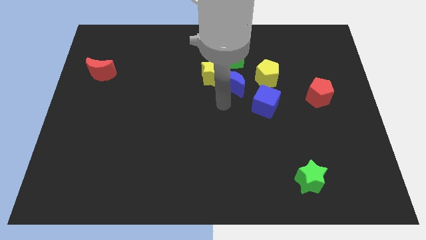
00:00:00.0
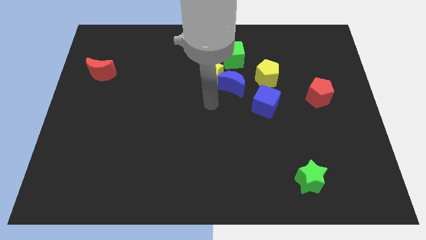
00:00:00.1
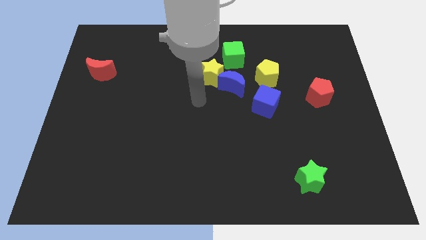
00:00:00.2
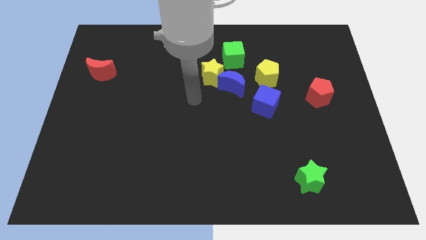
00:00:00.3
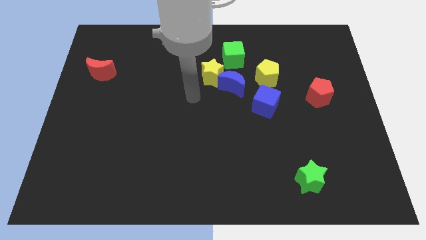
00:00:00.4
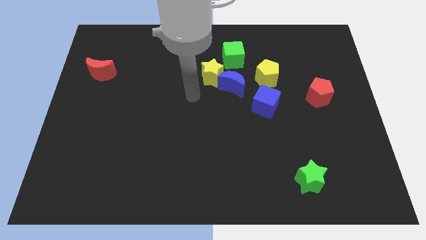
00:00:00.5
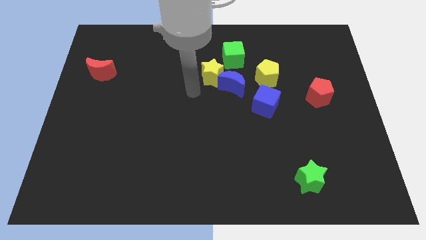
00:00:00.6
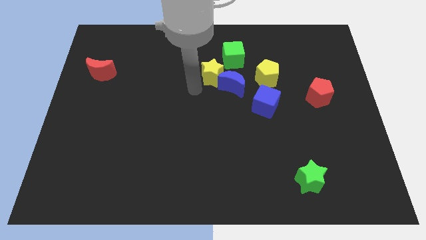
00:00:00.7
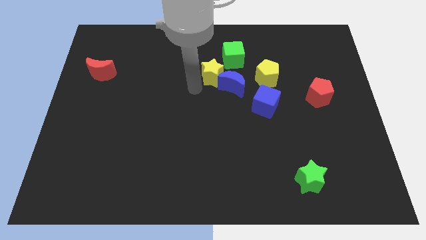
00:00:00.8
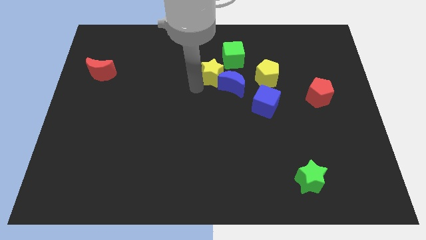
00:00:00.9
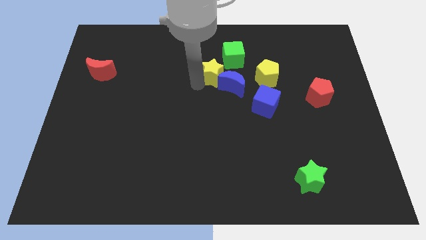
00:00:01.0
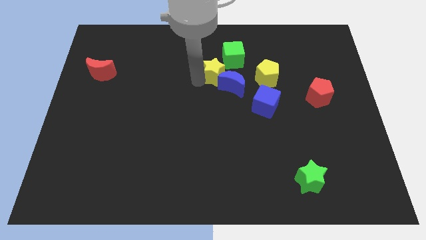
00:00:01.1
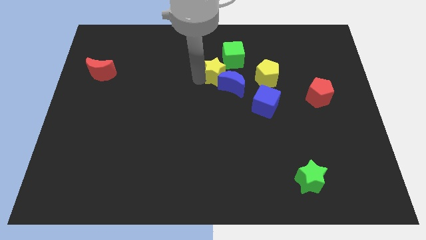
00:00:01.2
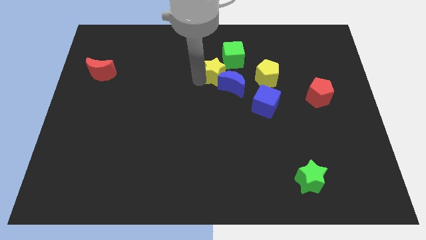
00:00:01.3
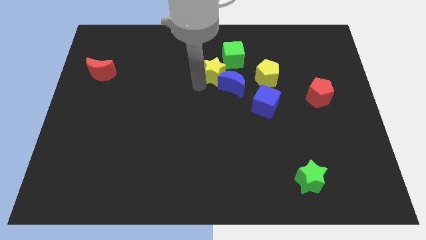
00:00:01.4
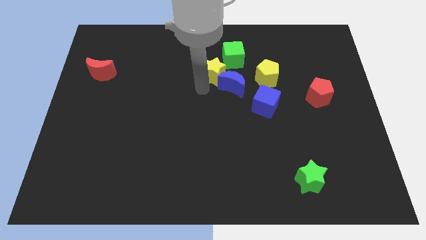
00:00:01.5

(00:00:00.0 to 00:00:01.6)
push the yellow star slightly towards the green cube

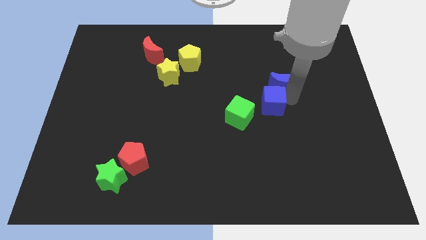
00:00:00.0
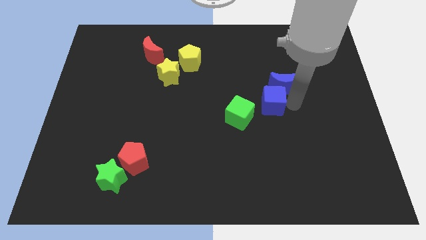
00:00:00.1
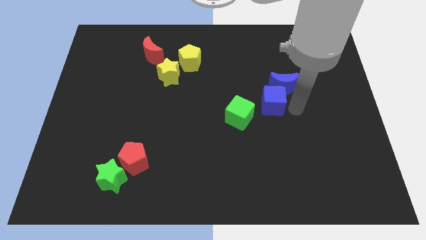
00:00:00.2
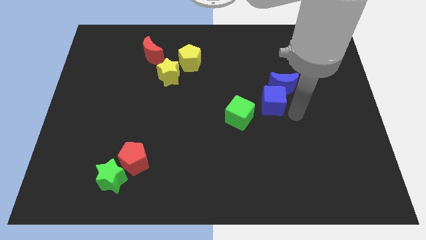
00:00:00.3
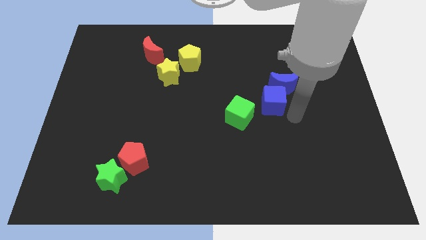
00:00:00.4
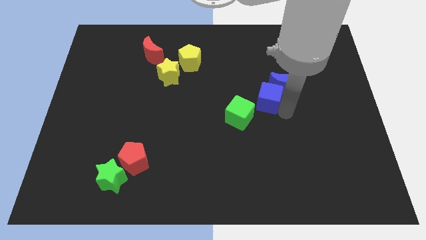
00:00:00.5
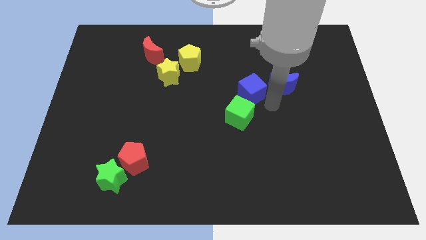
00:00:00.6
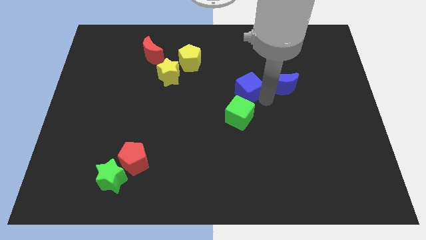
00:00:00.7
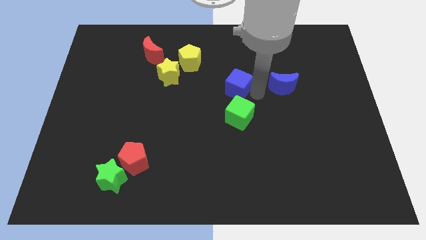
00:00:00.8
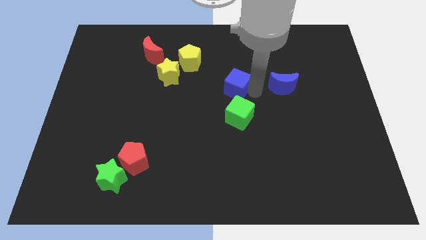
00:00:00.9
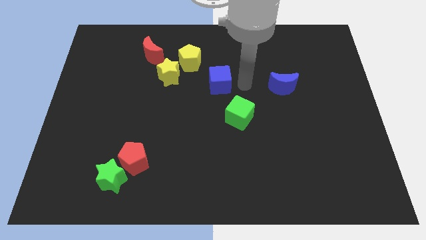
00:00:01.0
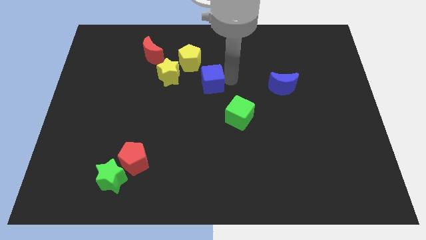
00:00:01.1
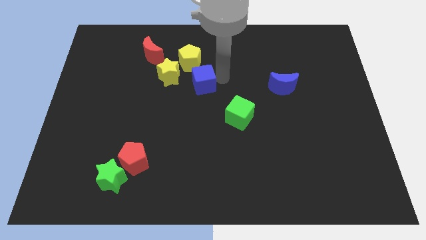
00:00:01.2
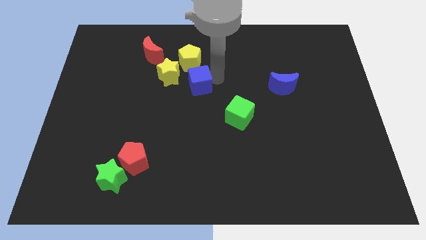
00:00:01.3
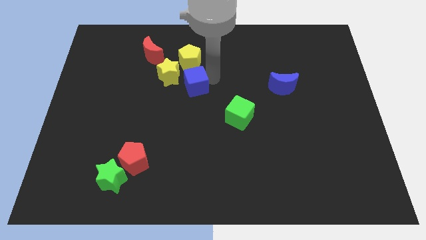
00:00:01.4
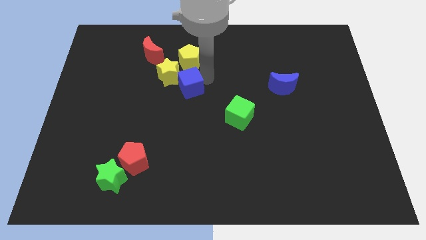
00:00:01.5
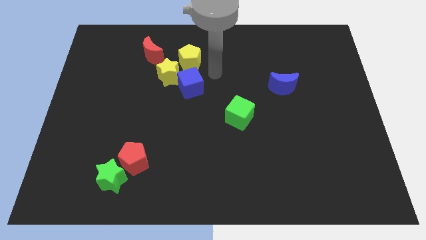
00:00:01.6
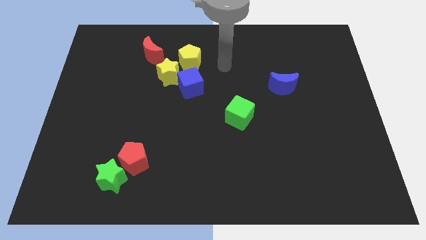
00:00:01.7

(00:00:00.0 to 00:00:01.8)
separate the blue cube from the blue crescent

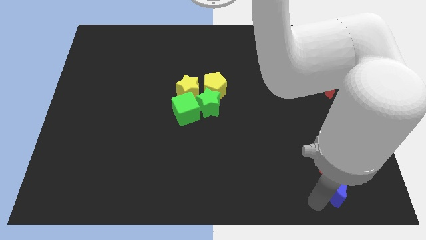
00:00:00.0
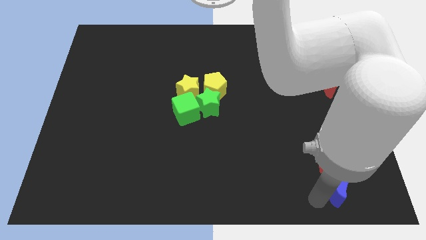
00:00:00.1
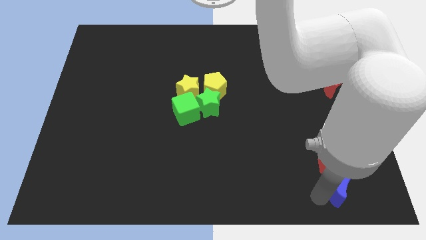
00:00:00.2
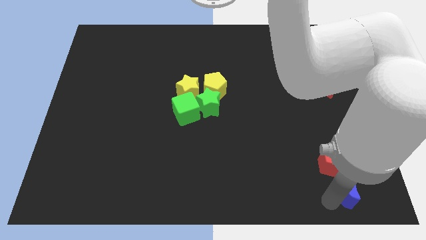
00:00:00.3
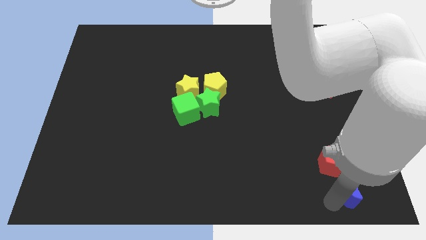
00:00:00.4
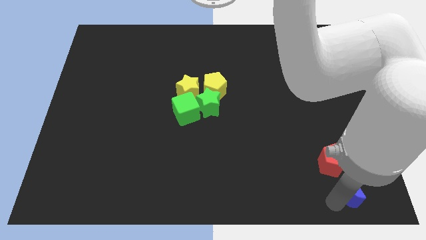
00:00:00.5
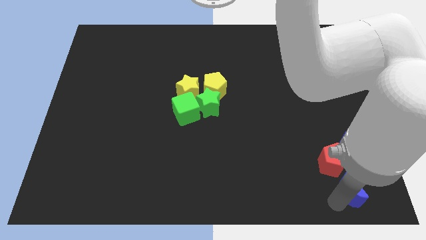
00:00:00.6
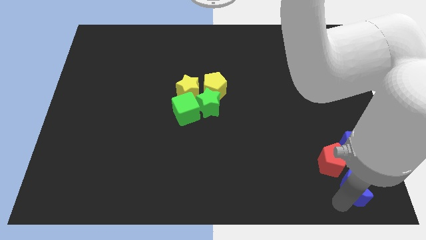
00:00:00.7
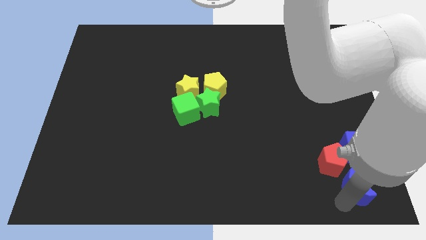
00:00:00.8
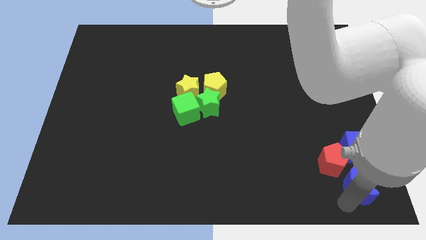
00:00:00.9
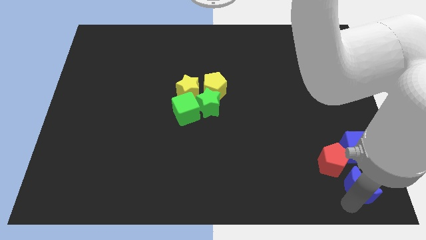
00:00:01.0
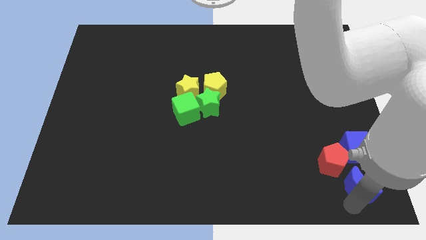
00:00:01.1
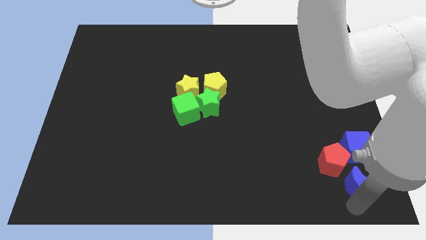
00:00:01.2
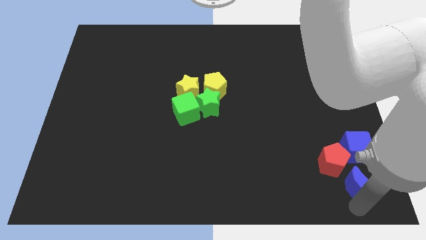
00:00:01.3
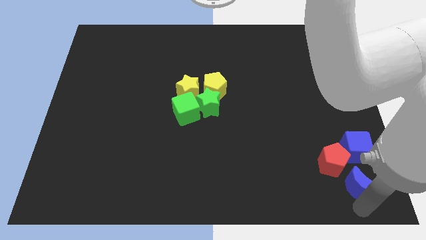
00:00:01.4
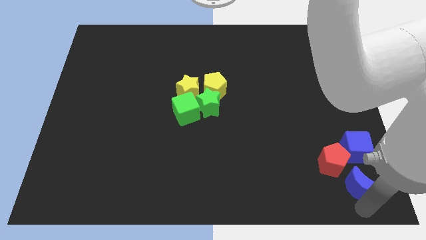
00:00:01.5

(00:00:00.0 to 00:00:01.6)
place the blue moon below the blue cube

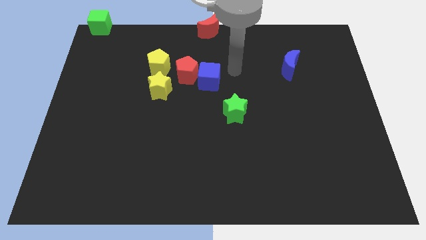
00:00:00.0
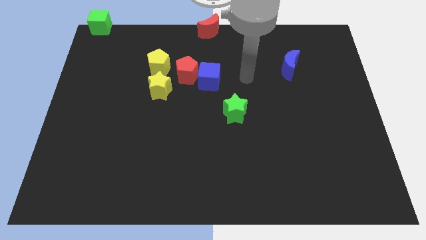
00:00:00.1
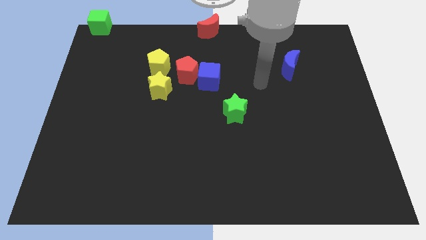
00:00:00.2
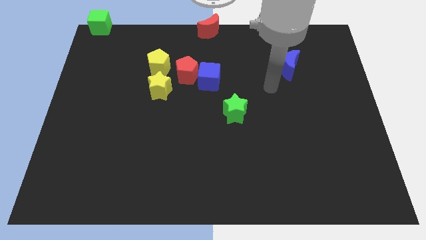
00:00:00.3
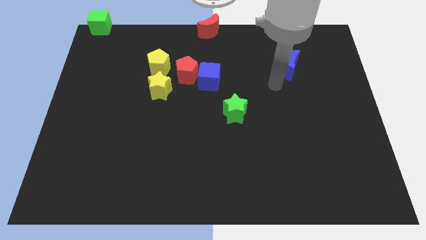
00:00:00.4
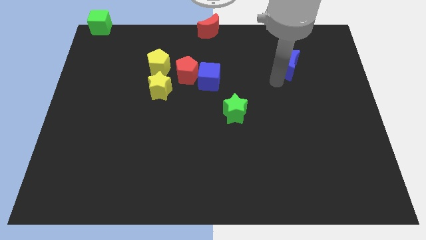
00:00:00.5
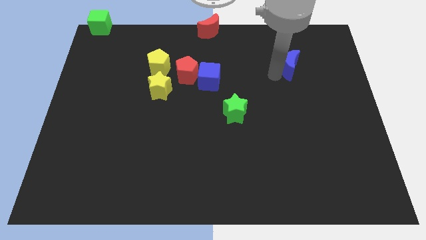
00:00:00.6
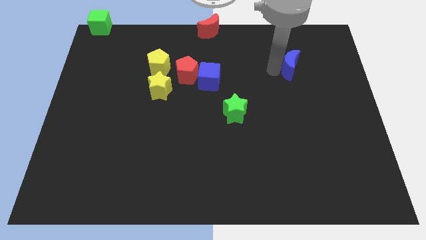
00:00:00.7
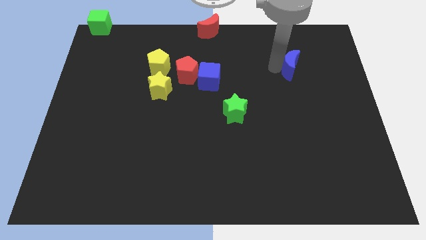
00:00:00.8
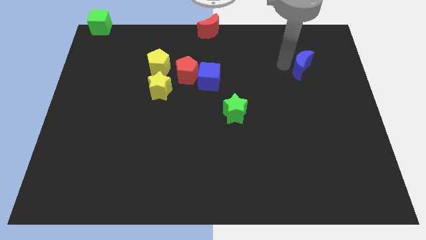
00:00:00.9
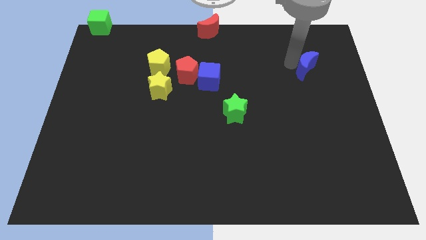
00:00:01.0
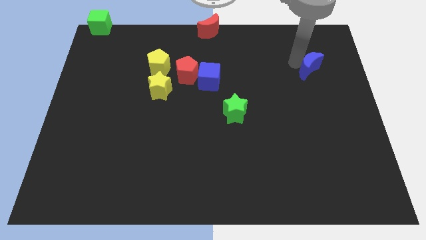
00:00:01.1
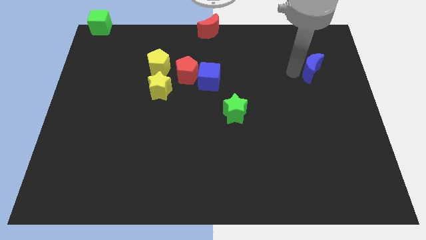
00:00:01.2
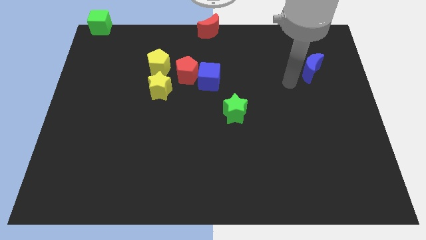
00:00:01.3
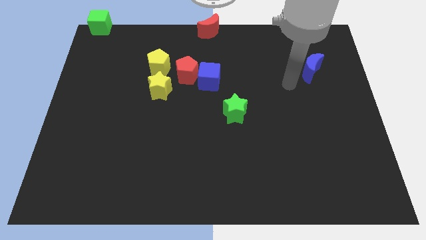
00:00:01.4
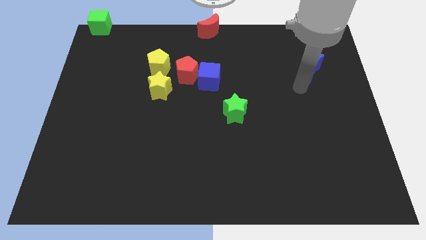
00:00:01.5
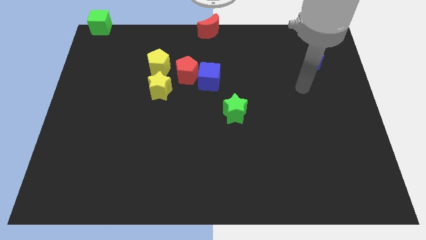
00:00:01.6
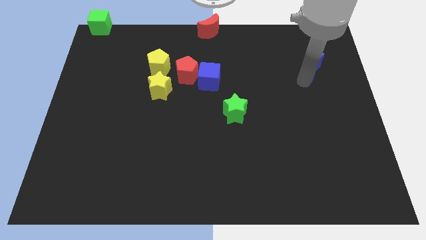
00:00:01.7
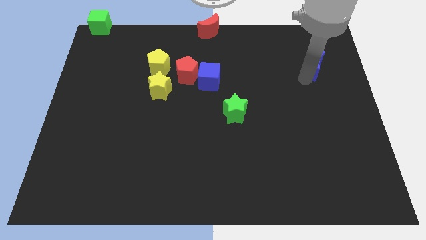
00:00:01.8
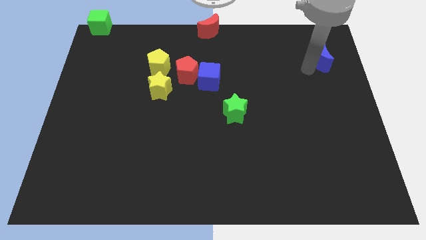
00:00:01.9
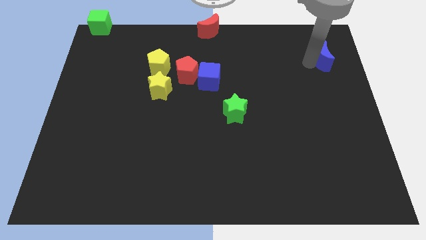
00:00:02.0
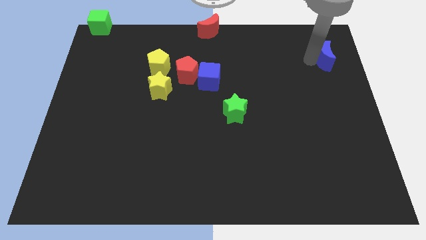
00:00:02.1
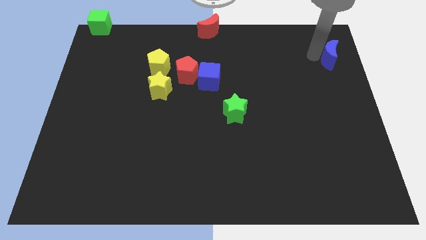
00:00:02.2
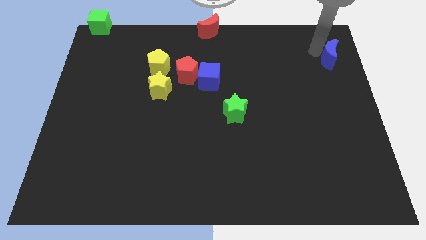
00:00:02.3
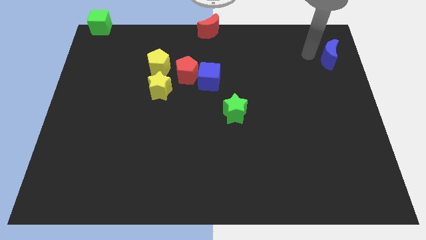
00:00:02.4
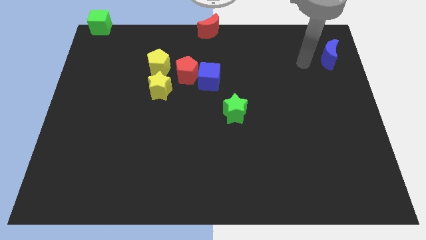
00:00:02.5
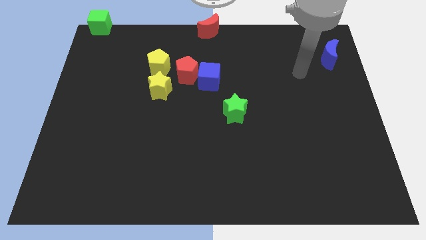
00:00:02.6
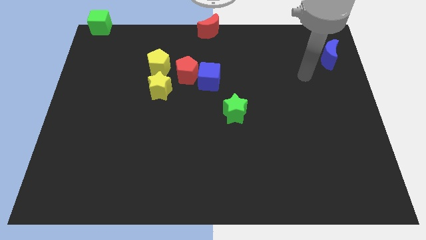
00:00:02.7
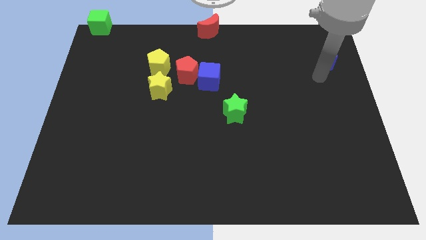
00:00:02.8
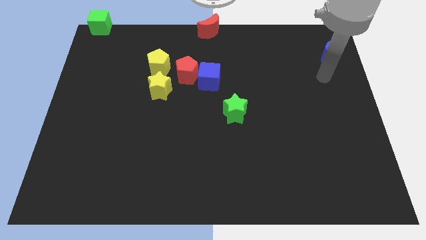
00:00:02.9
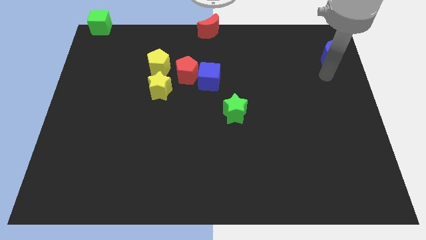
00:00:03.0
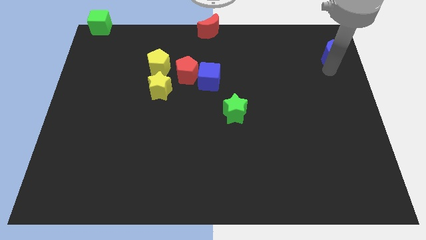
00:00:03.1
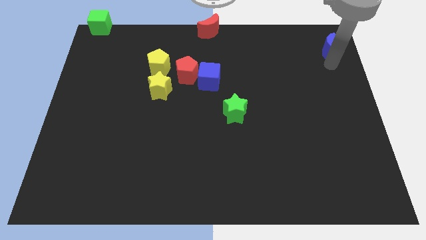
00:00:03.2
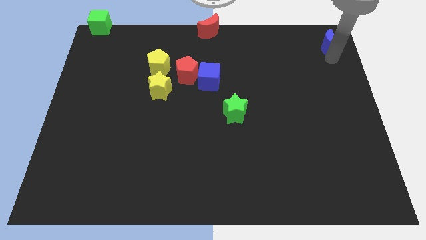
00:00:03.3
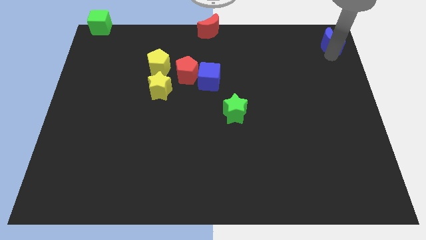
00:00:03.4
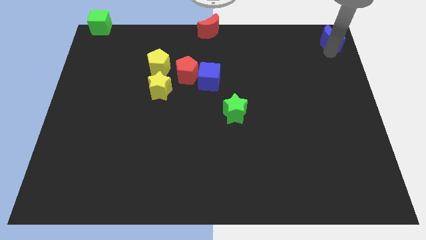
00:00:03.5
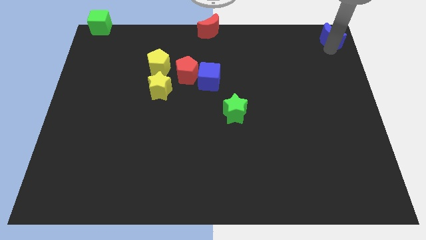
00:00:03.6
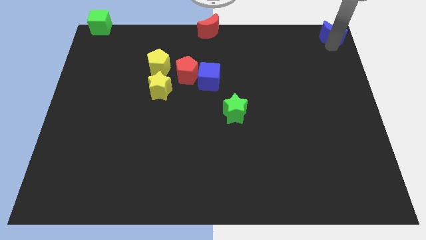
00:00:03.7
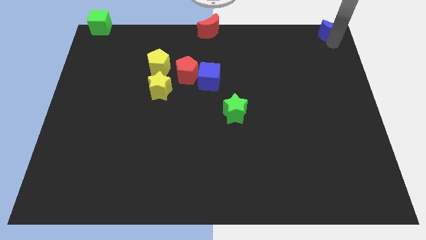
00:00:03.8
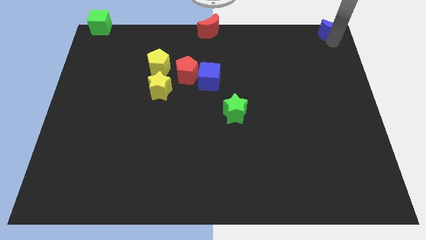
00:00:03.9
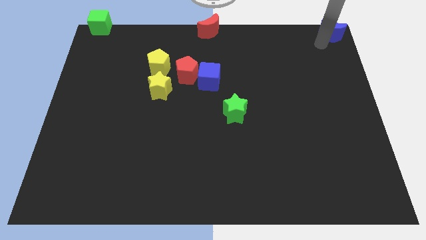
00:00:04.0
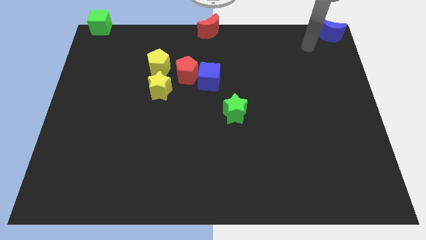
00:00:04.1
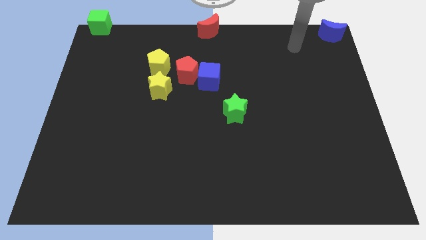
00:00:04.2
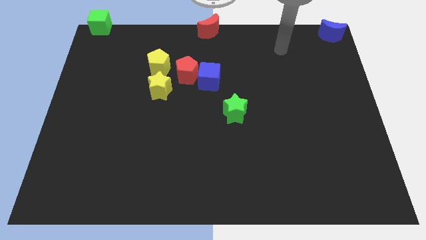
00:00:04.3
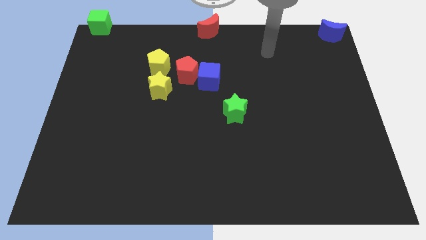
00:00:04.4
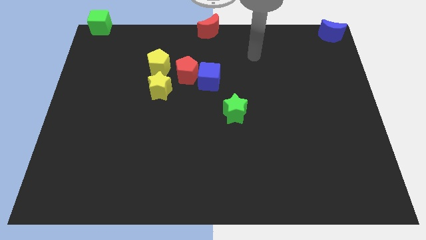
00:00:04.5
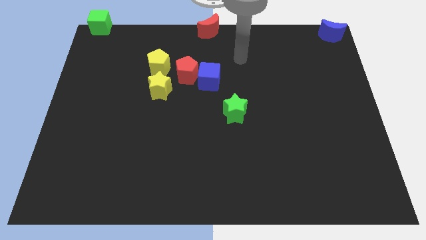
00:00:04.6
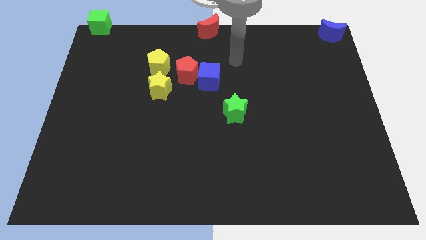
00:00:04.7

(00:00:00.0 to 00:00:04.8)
place the blue crescent horizontally to the right side of the red crescent
